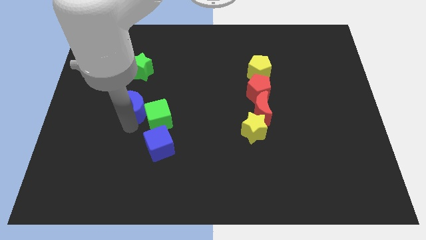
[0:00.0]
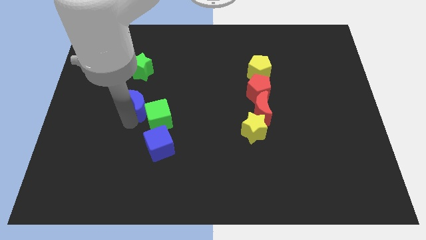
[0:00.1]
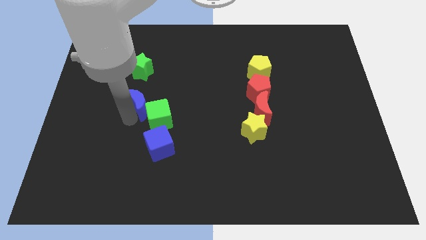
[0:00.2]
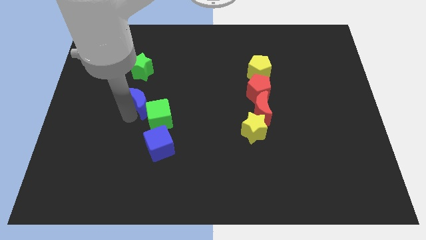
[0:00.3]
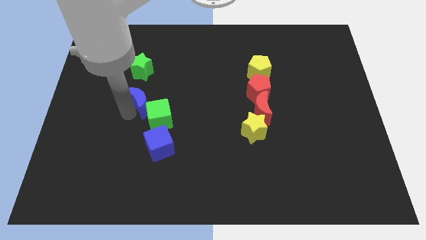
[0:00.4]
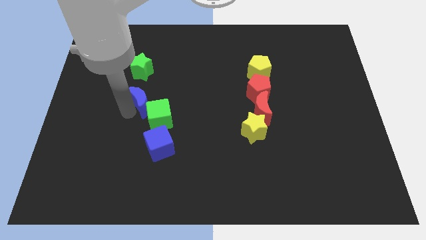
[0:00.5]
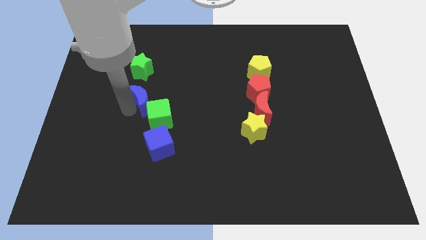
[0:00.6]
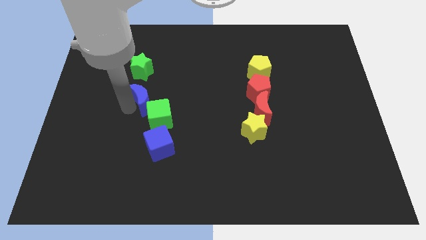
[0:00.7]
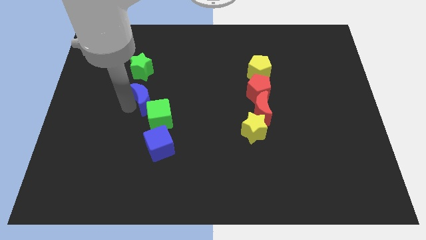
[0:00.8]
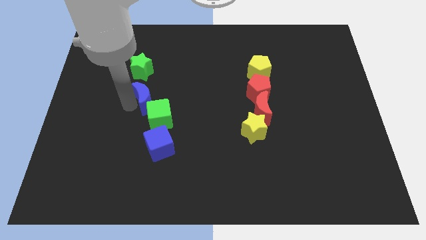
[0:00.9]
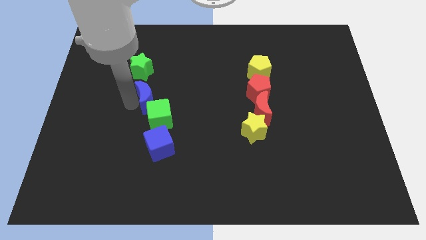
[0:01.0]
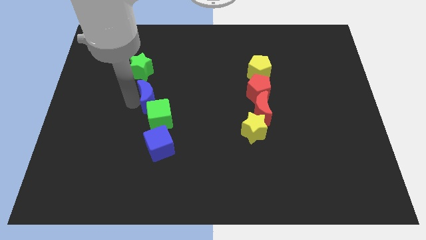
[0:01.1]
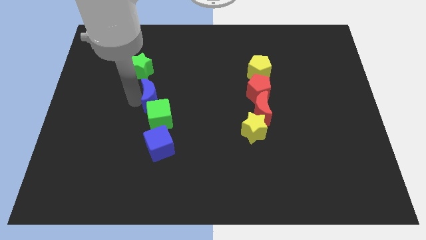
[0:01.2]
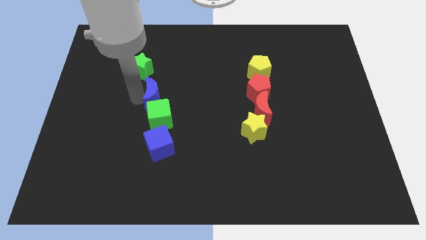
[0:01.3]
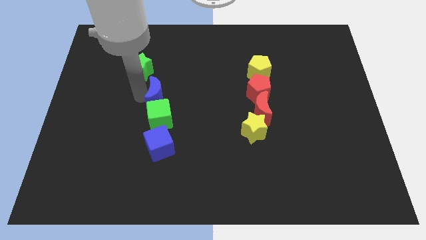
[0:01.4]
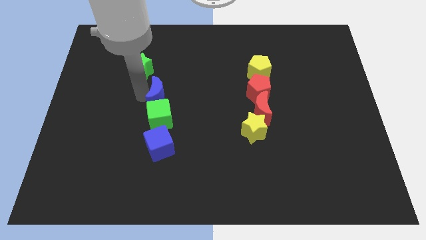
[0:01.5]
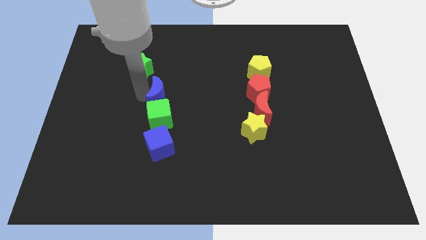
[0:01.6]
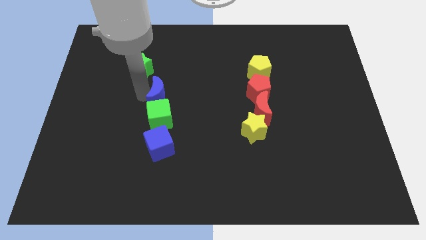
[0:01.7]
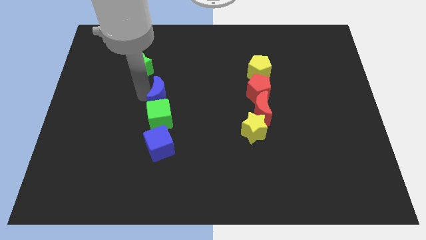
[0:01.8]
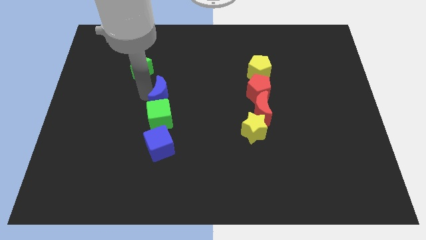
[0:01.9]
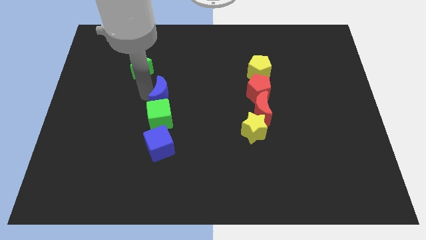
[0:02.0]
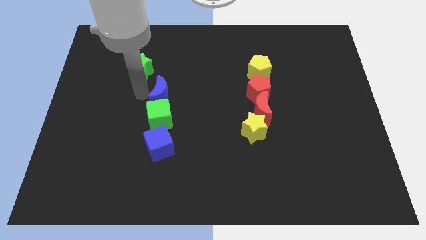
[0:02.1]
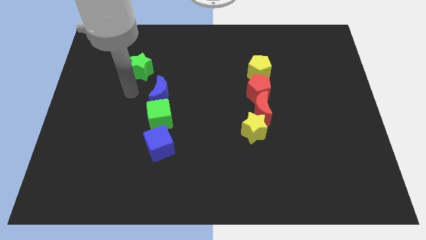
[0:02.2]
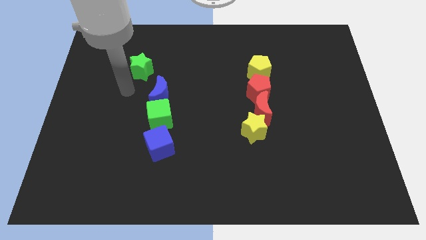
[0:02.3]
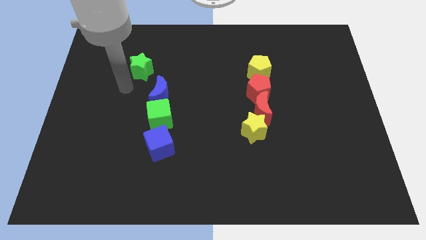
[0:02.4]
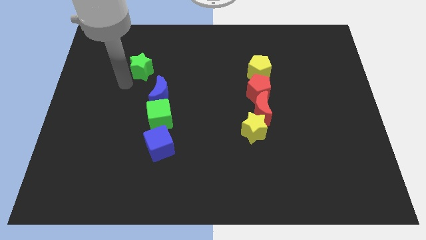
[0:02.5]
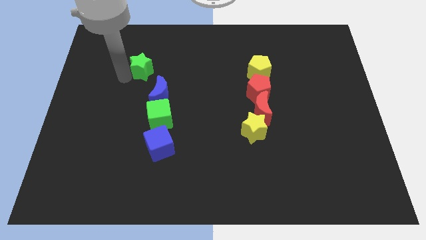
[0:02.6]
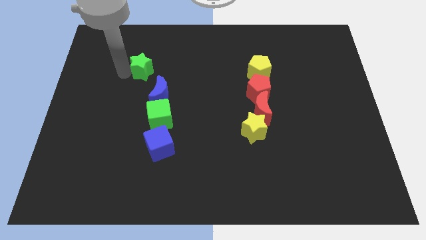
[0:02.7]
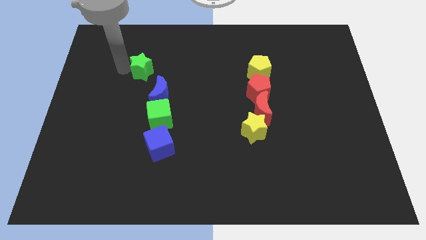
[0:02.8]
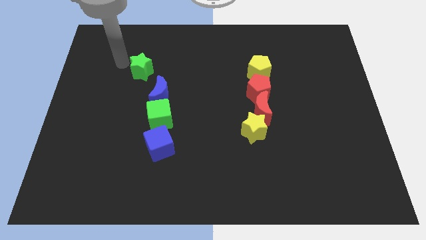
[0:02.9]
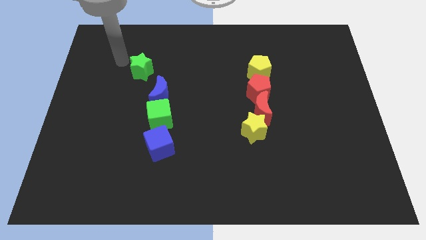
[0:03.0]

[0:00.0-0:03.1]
place blue crescent parallel to red pentagon

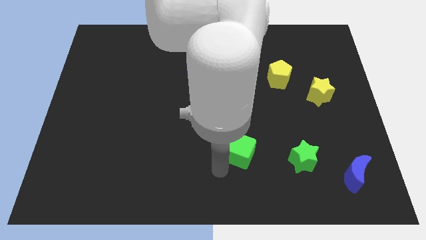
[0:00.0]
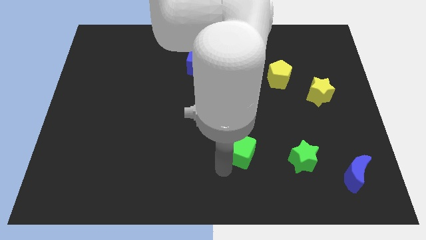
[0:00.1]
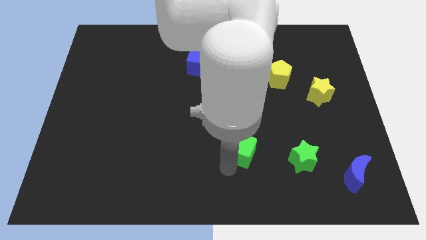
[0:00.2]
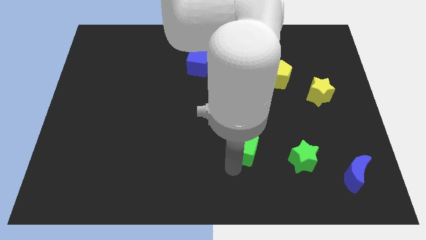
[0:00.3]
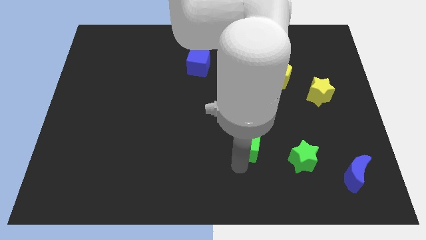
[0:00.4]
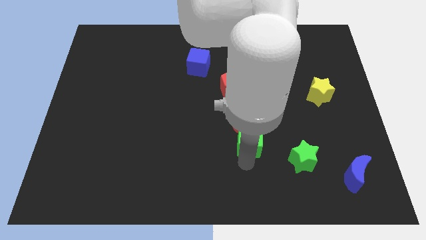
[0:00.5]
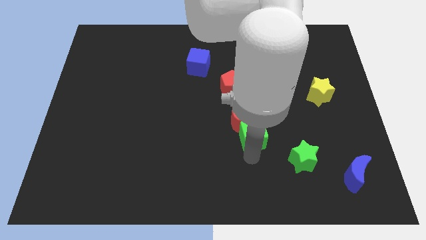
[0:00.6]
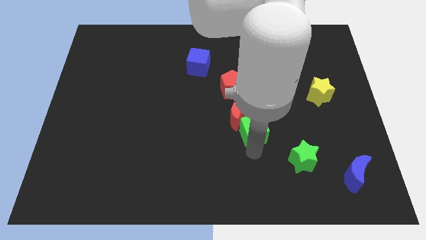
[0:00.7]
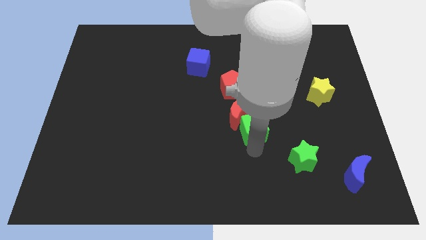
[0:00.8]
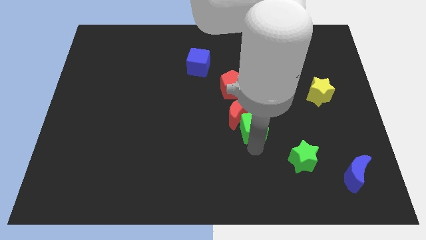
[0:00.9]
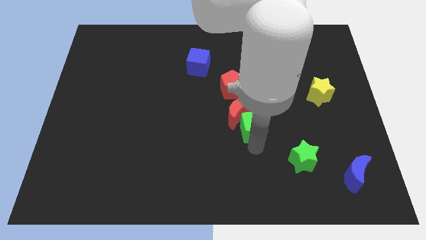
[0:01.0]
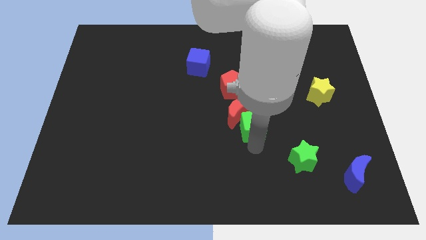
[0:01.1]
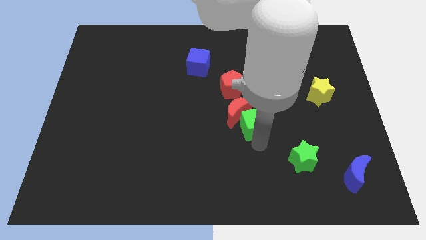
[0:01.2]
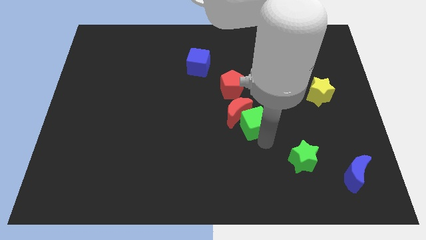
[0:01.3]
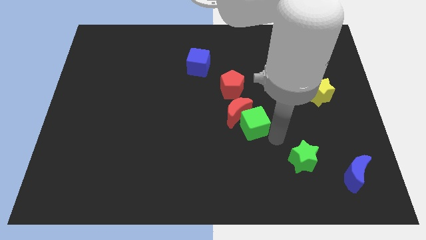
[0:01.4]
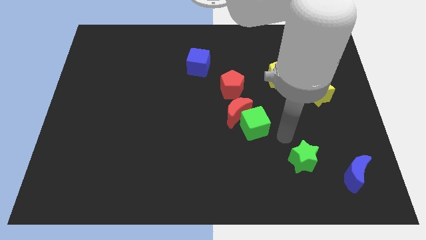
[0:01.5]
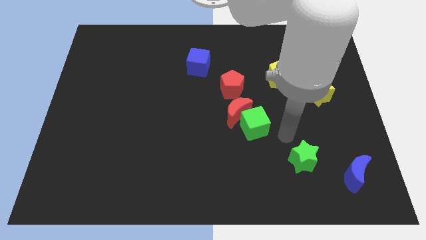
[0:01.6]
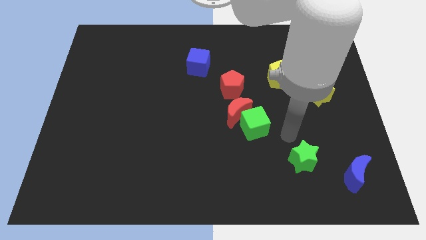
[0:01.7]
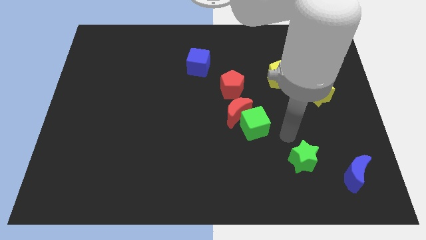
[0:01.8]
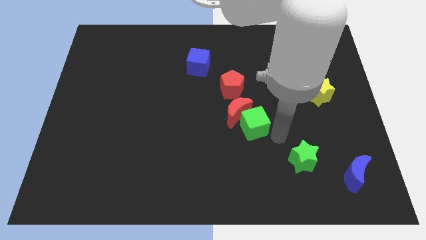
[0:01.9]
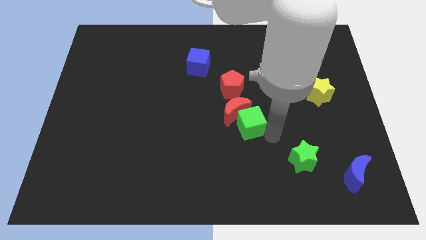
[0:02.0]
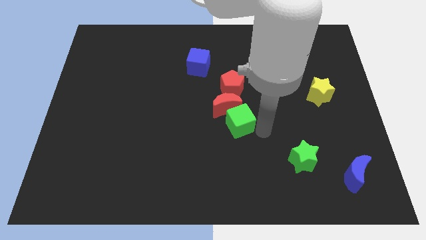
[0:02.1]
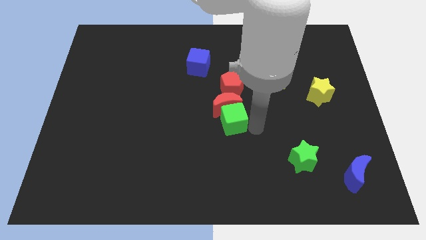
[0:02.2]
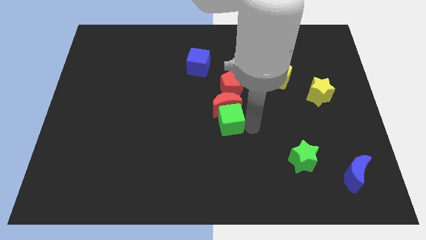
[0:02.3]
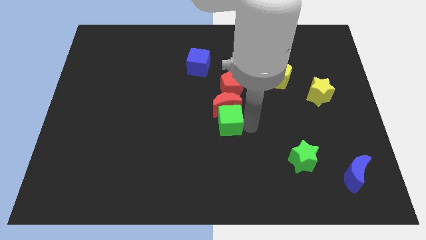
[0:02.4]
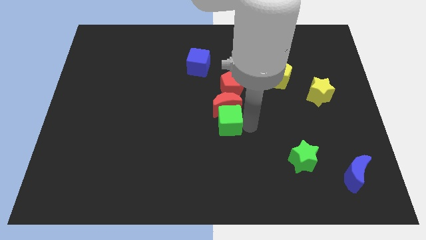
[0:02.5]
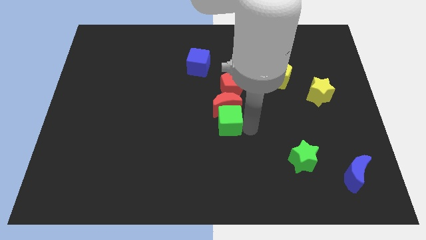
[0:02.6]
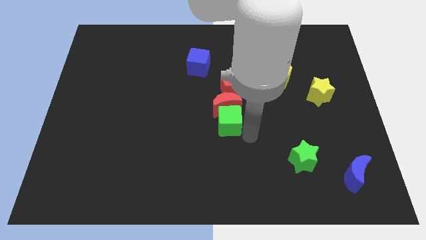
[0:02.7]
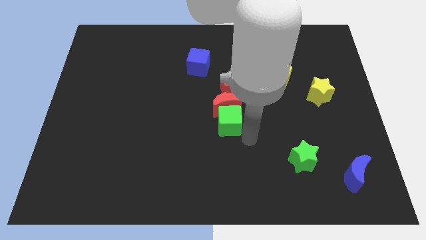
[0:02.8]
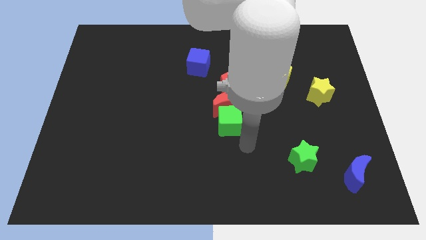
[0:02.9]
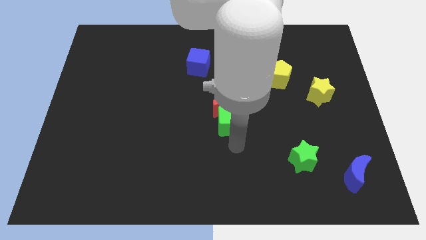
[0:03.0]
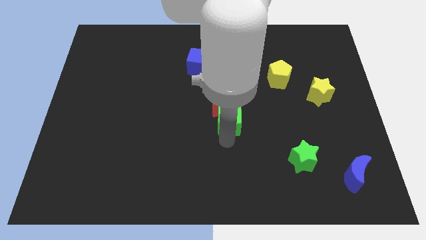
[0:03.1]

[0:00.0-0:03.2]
push the green cube into the red crescent

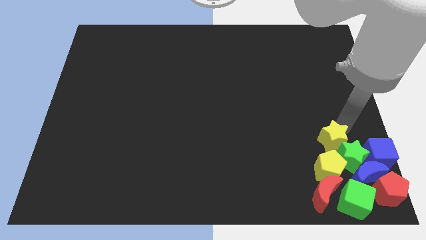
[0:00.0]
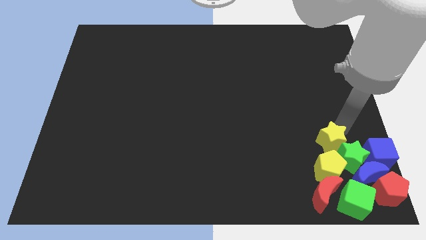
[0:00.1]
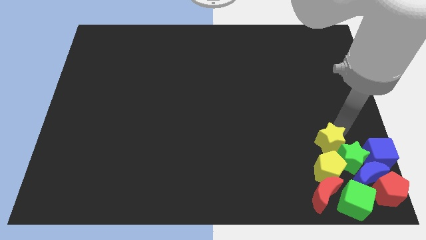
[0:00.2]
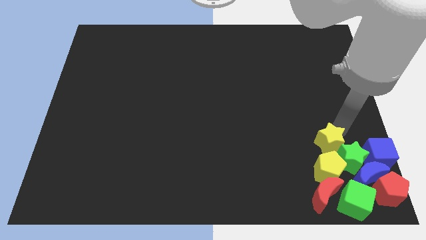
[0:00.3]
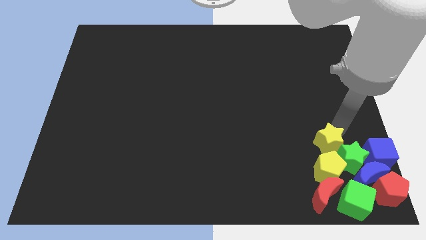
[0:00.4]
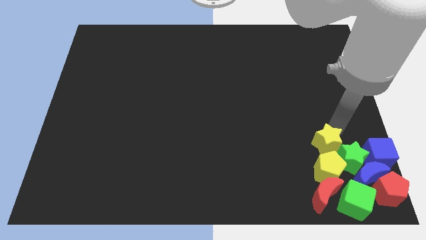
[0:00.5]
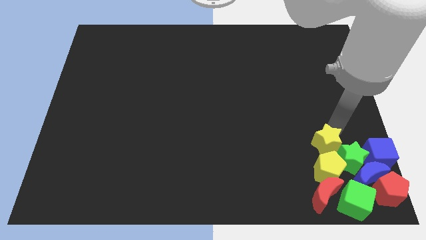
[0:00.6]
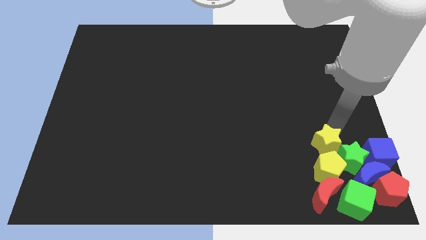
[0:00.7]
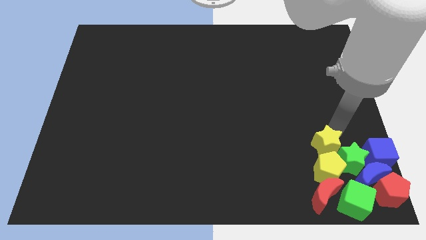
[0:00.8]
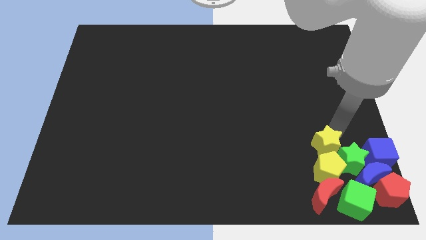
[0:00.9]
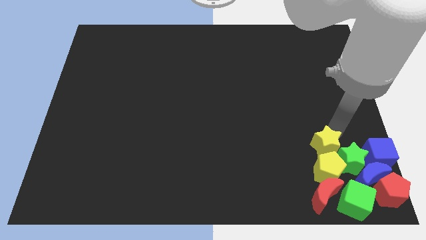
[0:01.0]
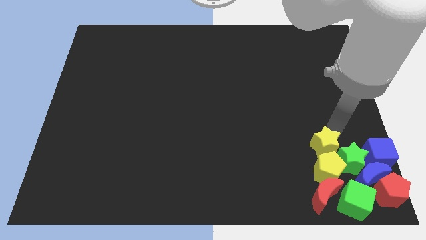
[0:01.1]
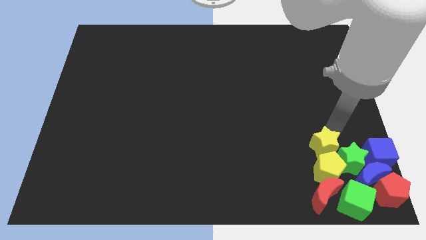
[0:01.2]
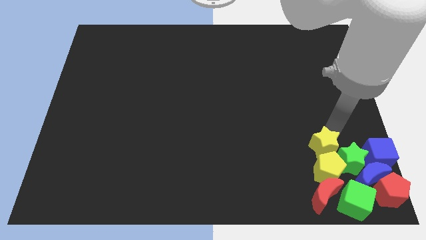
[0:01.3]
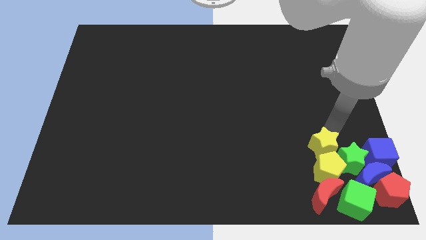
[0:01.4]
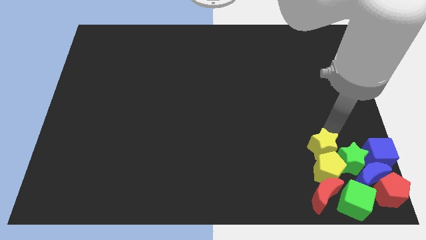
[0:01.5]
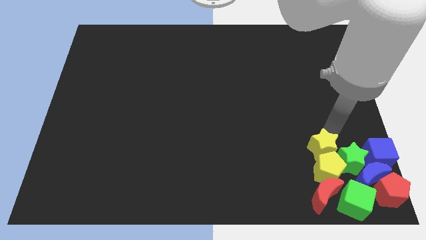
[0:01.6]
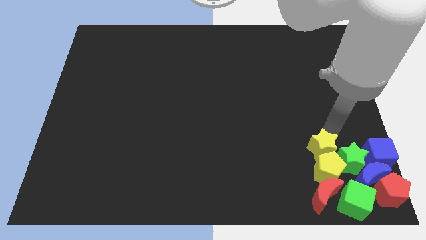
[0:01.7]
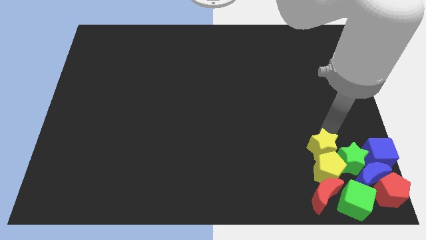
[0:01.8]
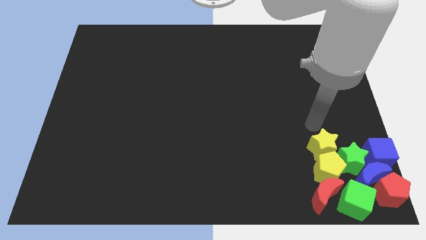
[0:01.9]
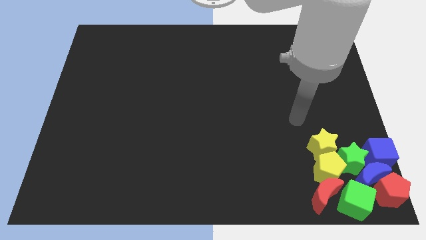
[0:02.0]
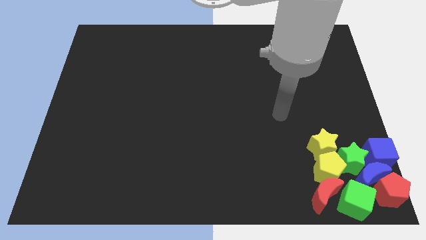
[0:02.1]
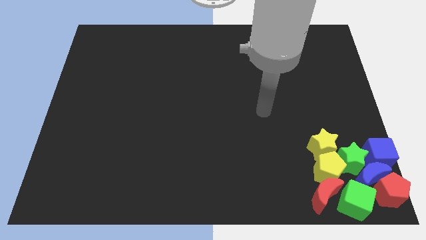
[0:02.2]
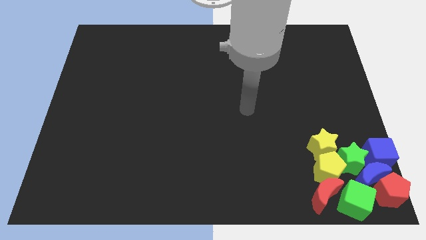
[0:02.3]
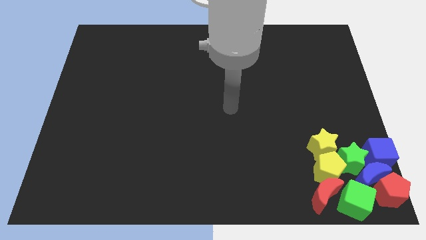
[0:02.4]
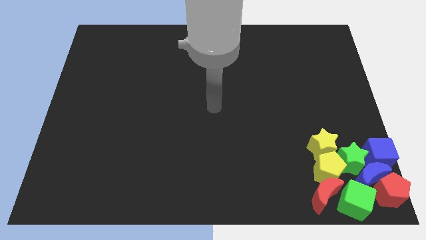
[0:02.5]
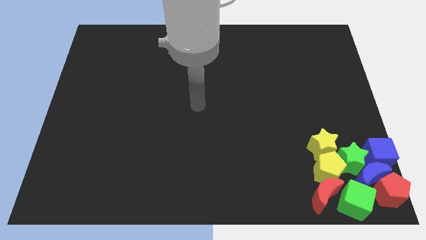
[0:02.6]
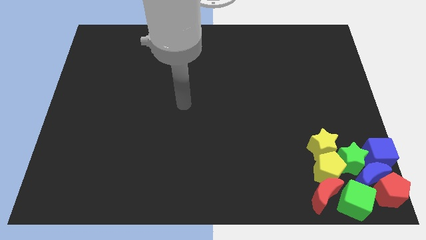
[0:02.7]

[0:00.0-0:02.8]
place the yellow star close to the yellow pentagon
